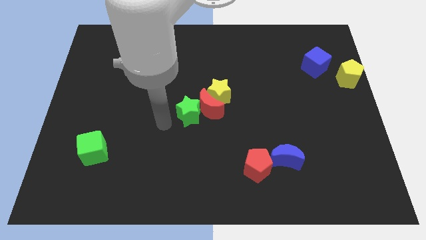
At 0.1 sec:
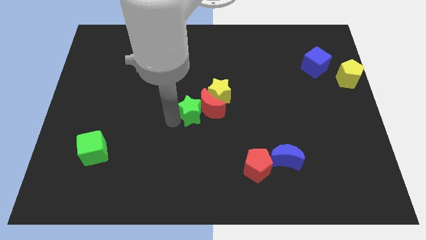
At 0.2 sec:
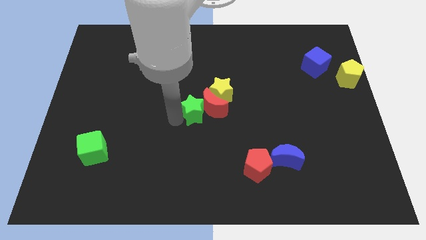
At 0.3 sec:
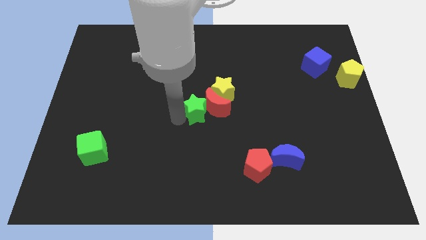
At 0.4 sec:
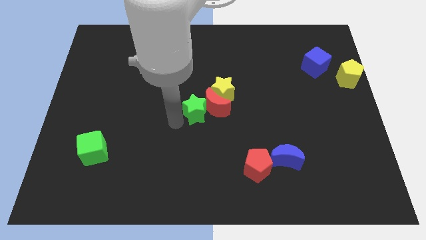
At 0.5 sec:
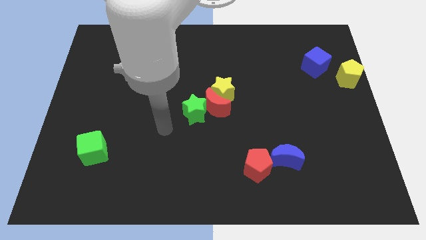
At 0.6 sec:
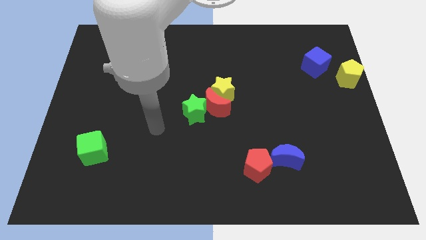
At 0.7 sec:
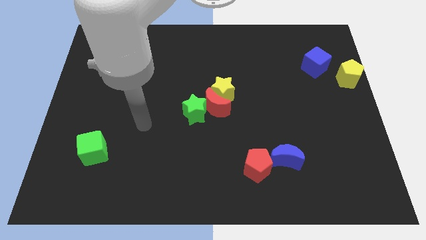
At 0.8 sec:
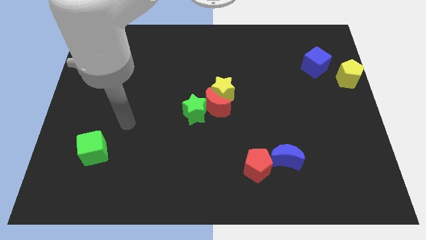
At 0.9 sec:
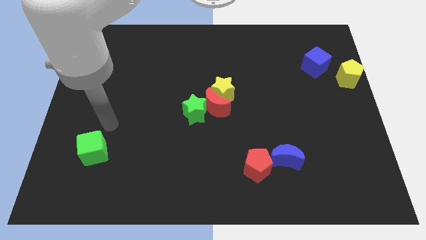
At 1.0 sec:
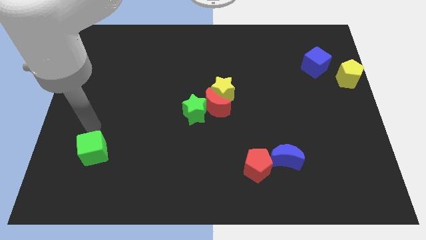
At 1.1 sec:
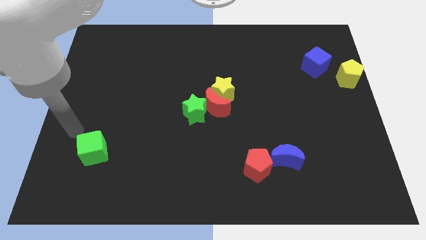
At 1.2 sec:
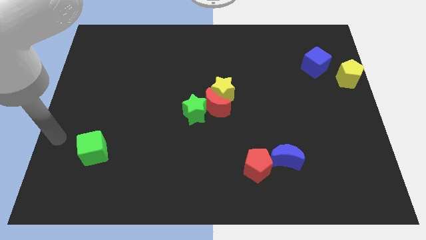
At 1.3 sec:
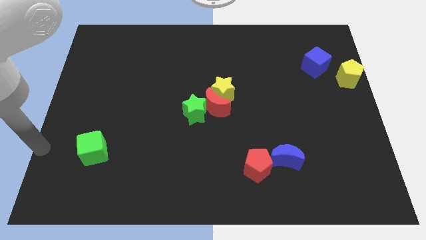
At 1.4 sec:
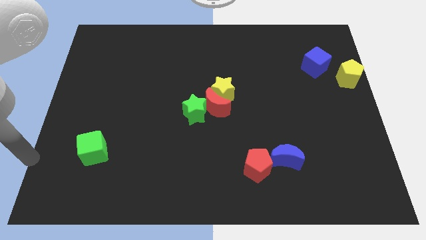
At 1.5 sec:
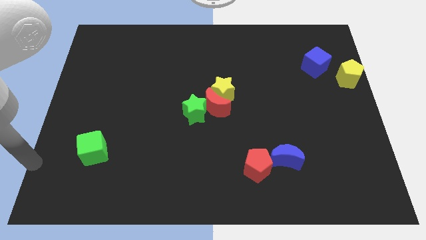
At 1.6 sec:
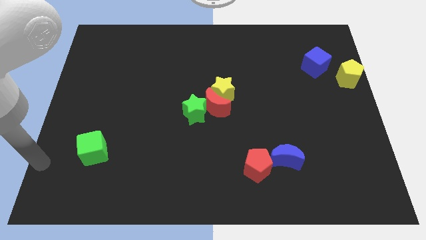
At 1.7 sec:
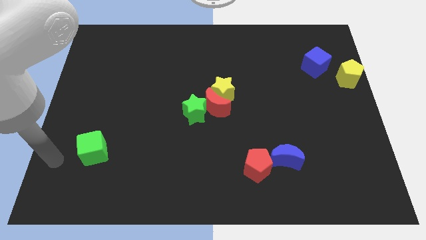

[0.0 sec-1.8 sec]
push the green star into the red moon

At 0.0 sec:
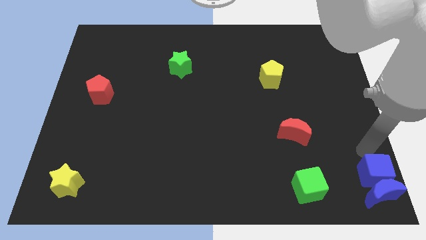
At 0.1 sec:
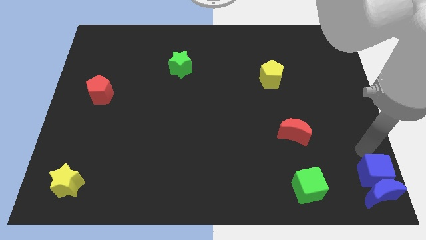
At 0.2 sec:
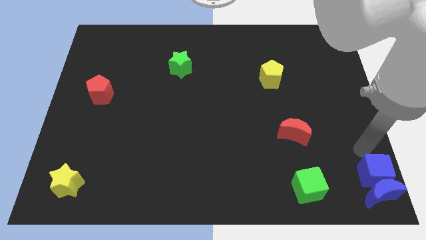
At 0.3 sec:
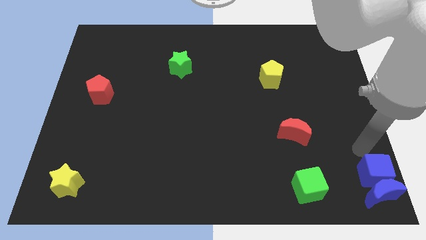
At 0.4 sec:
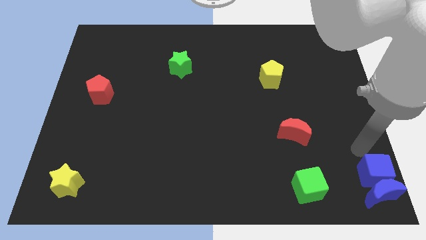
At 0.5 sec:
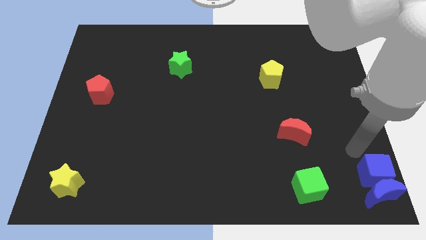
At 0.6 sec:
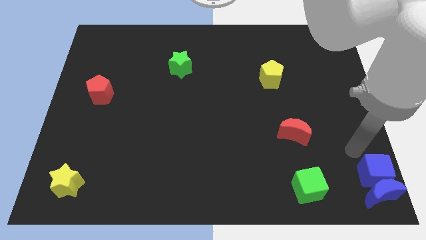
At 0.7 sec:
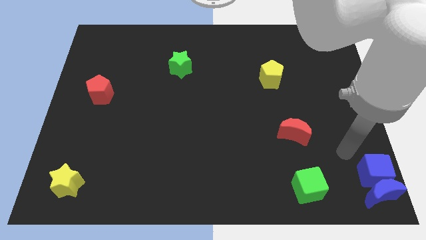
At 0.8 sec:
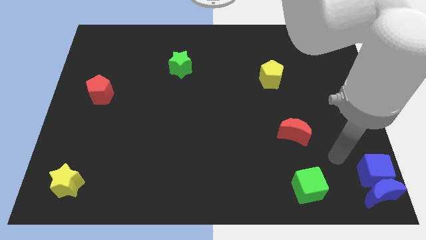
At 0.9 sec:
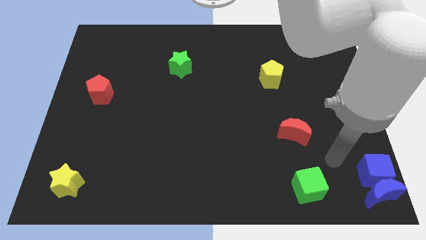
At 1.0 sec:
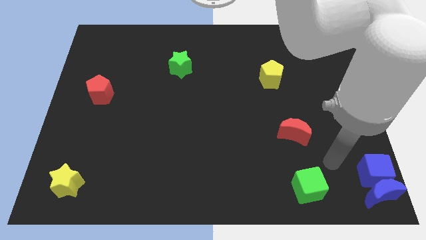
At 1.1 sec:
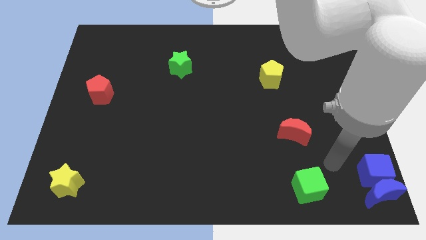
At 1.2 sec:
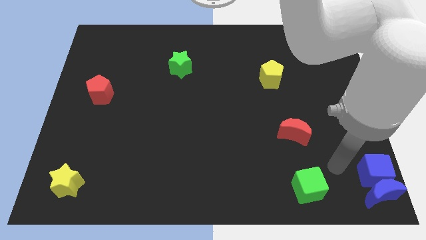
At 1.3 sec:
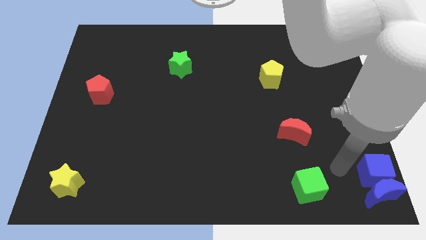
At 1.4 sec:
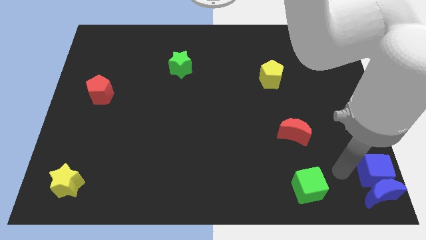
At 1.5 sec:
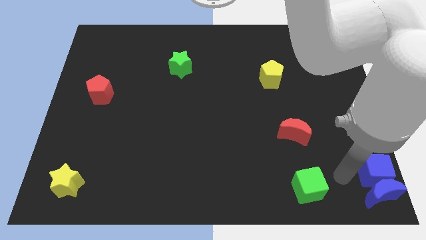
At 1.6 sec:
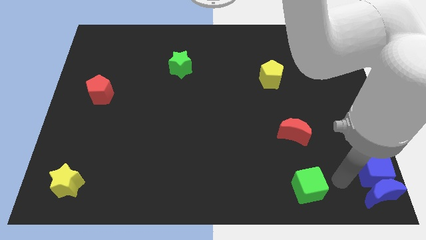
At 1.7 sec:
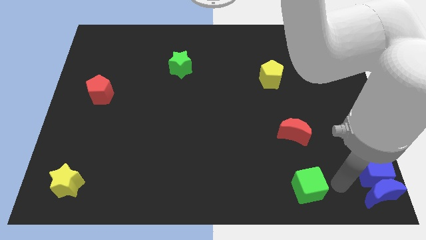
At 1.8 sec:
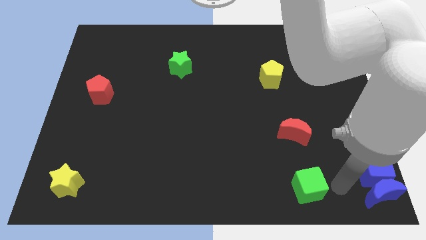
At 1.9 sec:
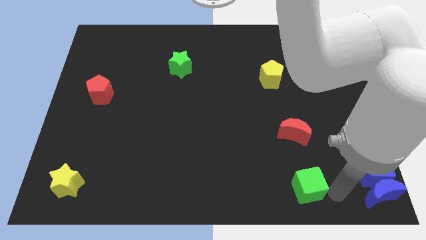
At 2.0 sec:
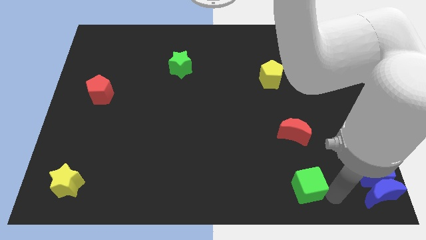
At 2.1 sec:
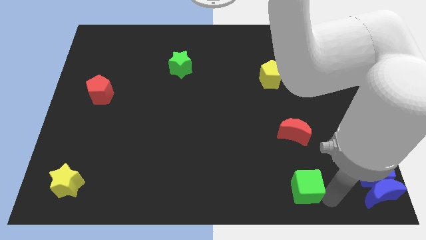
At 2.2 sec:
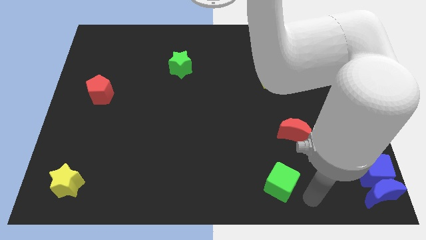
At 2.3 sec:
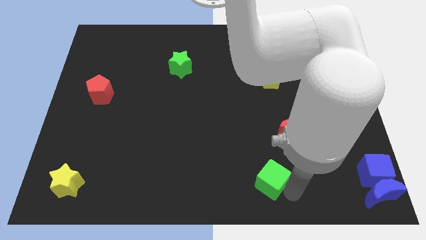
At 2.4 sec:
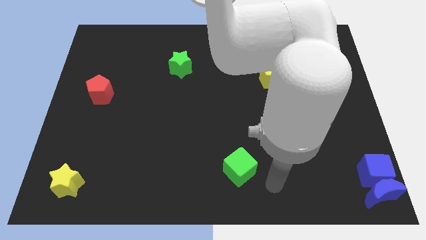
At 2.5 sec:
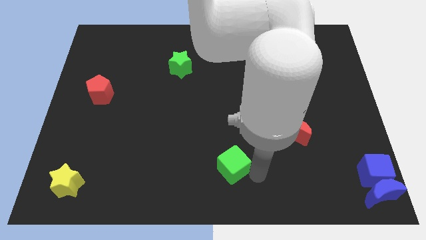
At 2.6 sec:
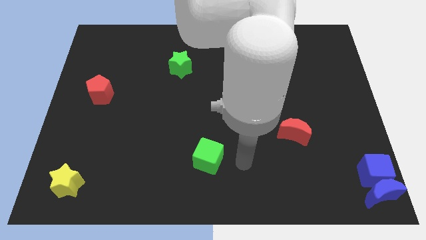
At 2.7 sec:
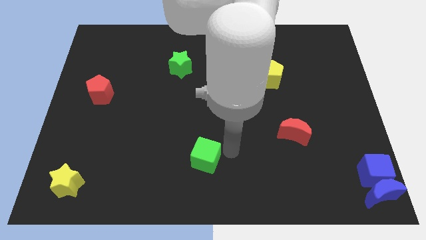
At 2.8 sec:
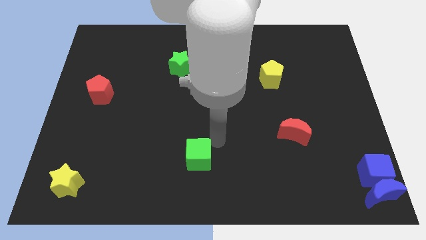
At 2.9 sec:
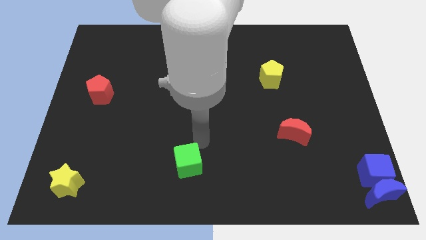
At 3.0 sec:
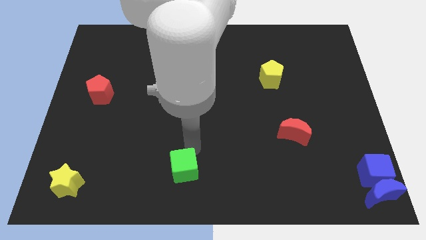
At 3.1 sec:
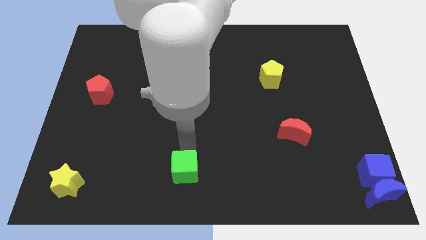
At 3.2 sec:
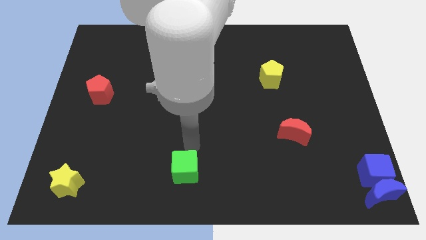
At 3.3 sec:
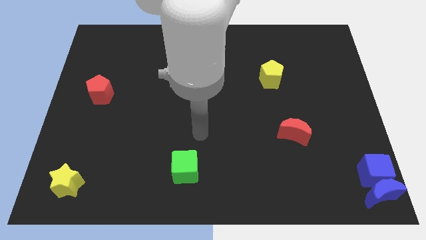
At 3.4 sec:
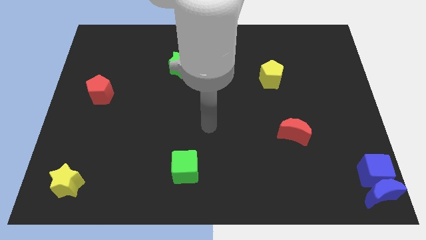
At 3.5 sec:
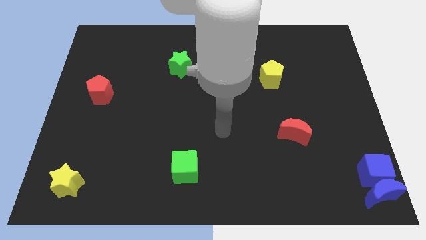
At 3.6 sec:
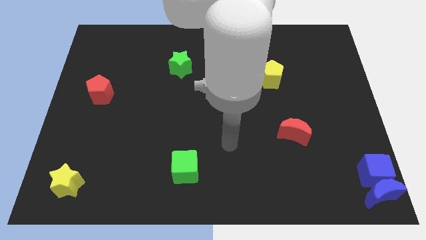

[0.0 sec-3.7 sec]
move the green cube to the bottom center of the board

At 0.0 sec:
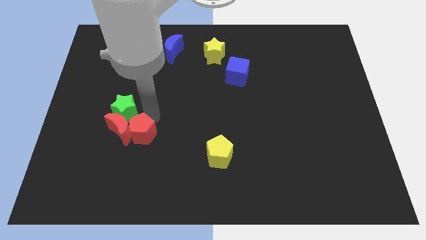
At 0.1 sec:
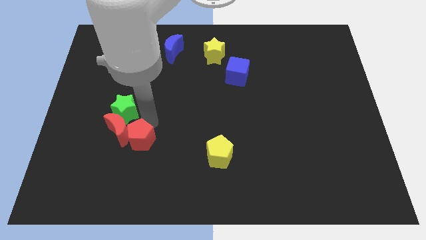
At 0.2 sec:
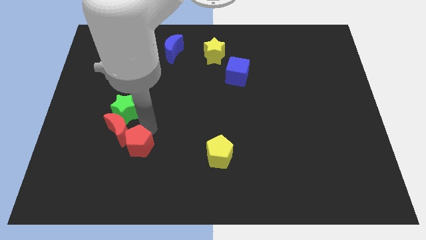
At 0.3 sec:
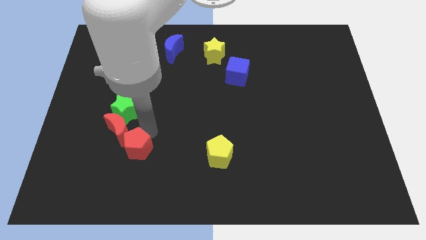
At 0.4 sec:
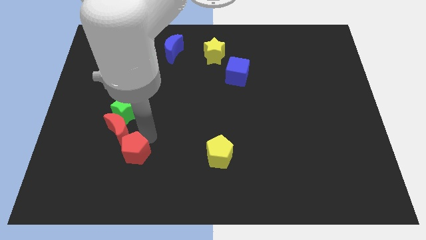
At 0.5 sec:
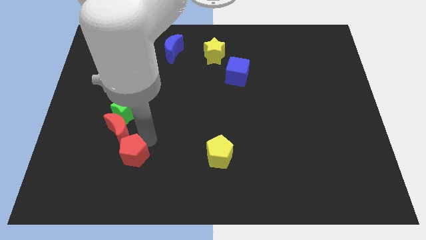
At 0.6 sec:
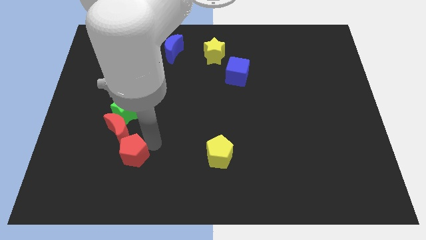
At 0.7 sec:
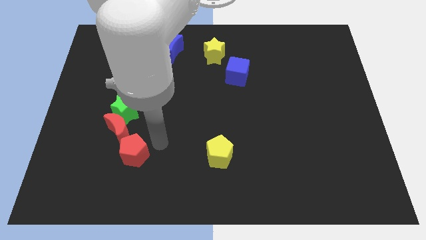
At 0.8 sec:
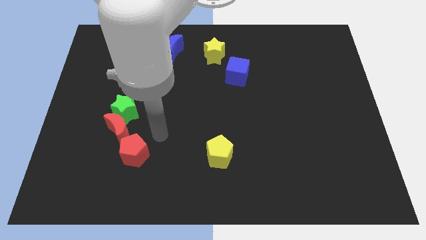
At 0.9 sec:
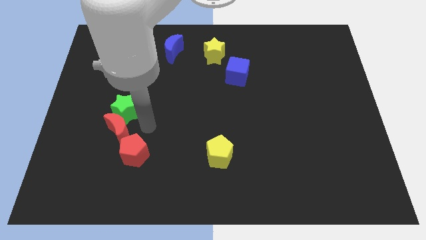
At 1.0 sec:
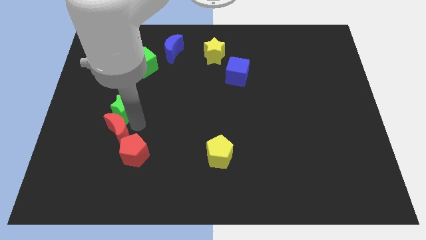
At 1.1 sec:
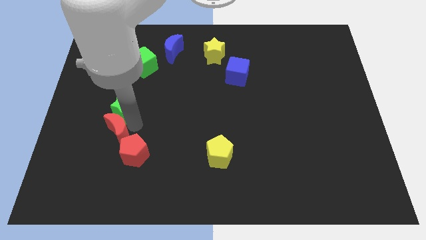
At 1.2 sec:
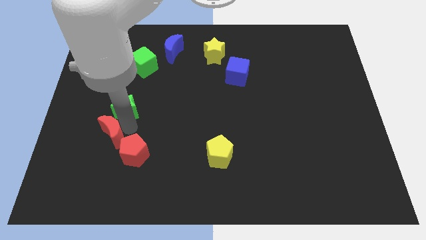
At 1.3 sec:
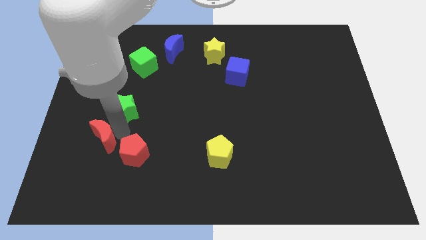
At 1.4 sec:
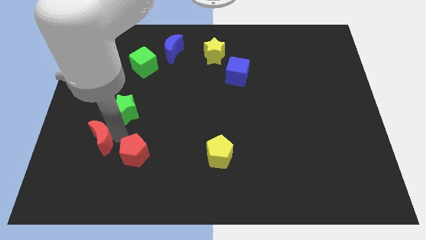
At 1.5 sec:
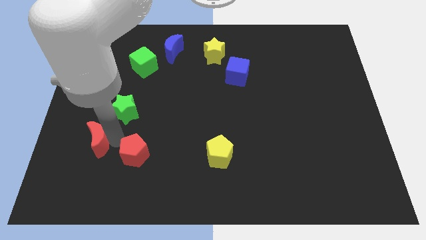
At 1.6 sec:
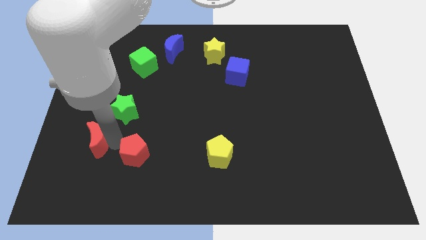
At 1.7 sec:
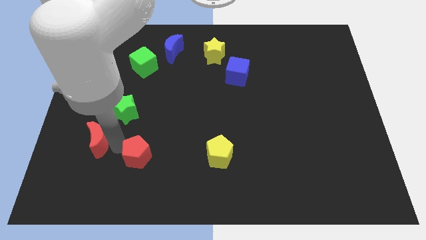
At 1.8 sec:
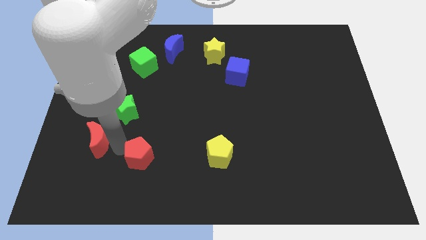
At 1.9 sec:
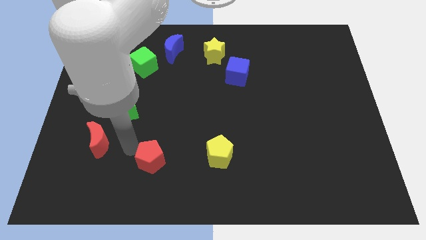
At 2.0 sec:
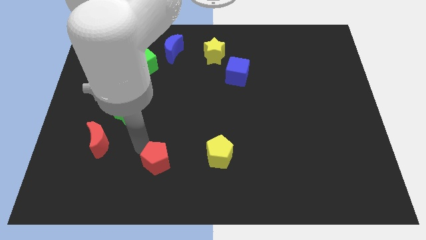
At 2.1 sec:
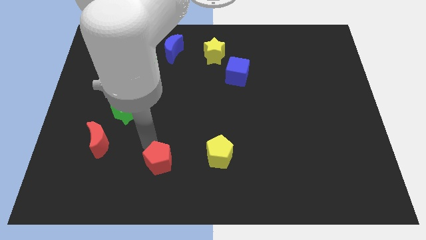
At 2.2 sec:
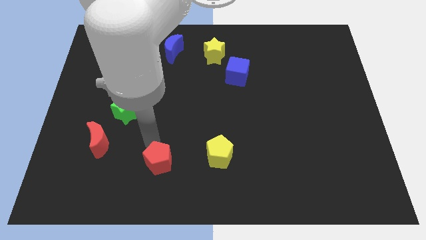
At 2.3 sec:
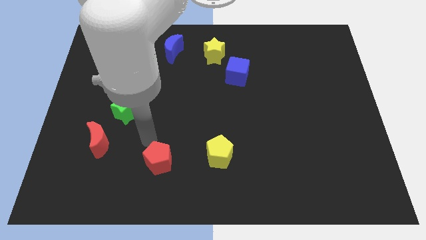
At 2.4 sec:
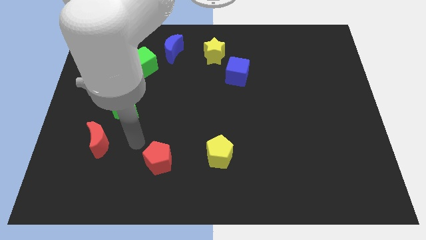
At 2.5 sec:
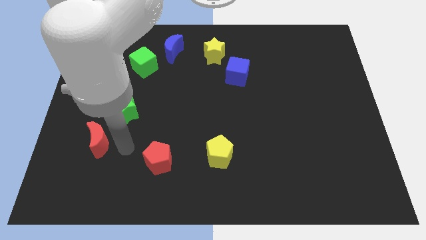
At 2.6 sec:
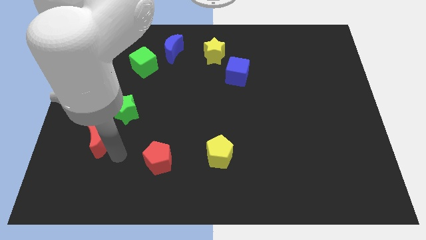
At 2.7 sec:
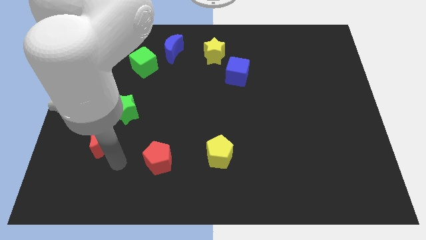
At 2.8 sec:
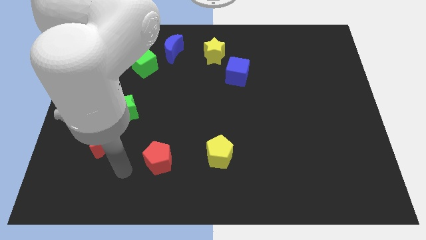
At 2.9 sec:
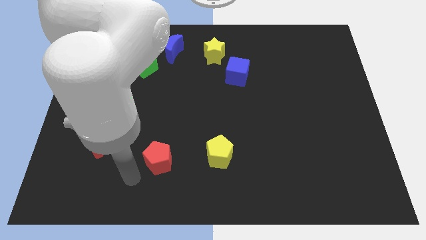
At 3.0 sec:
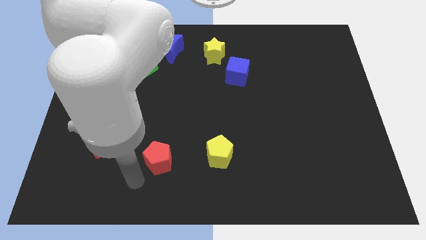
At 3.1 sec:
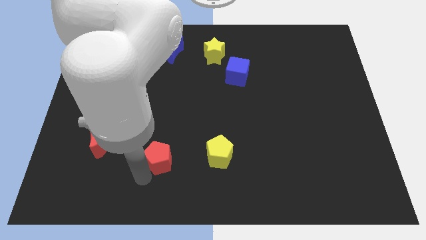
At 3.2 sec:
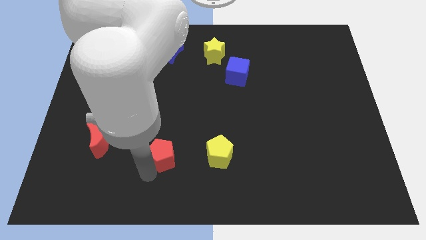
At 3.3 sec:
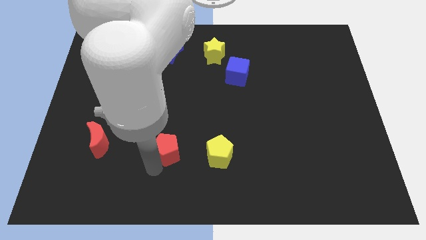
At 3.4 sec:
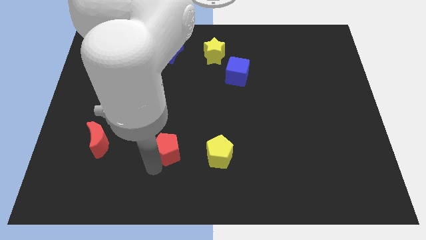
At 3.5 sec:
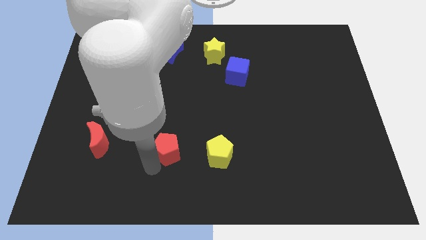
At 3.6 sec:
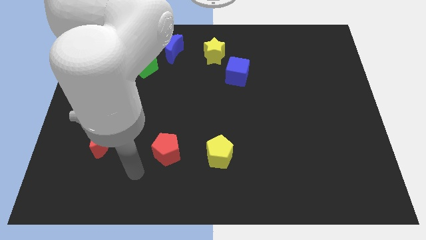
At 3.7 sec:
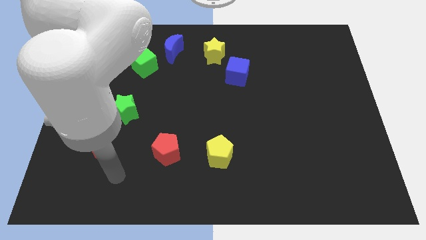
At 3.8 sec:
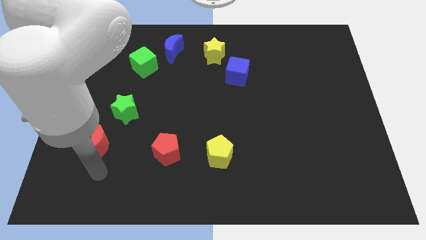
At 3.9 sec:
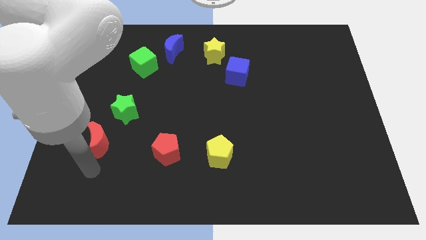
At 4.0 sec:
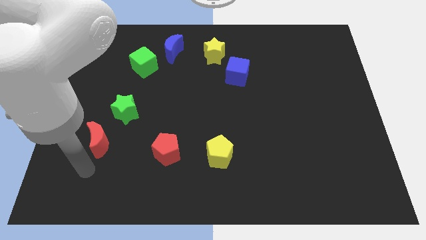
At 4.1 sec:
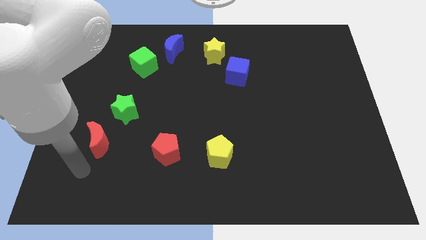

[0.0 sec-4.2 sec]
place red pentagon to the left of yellow pentagon
